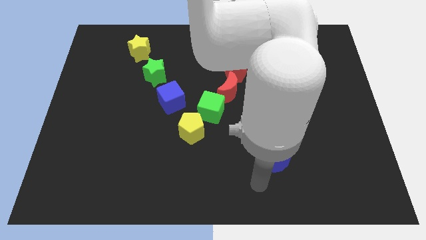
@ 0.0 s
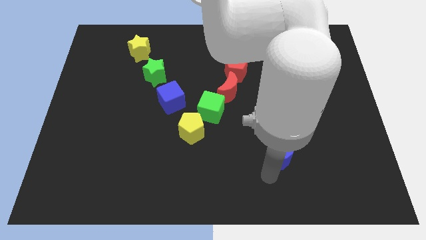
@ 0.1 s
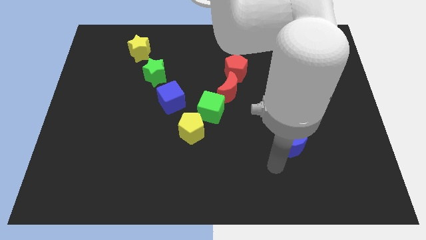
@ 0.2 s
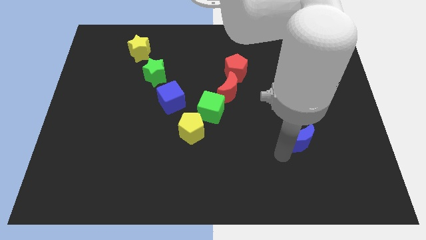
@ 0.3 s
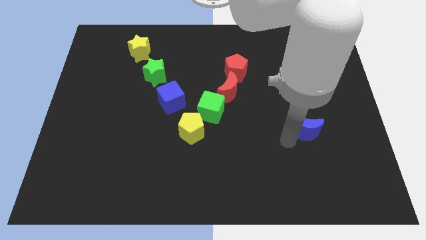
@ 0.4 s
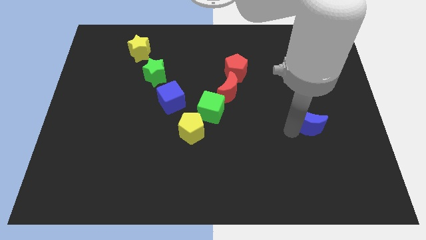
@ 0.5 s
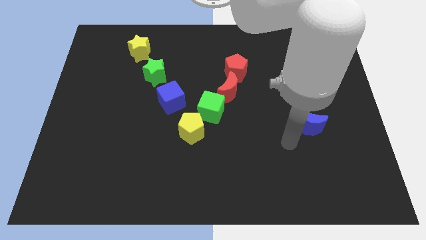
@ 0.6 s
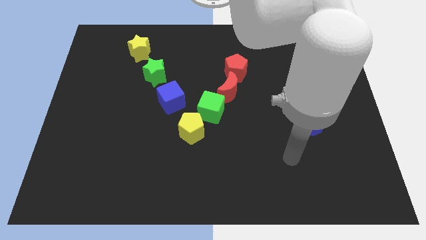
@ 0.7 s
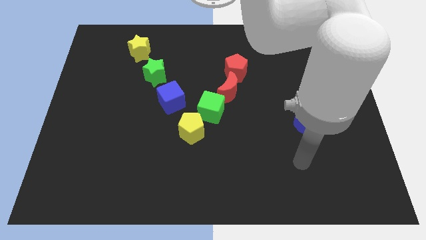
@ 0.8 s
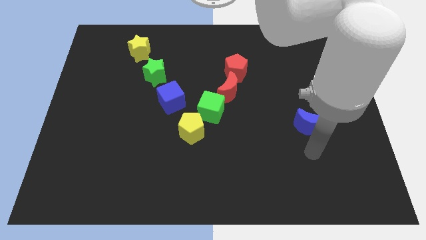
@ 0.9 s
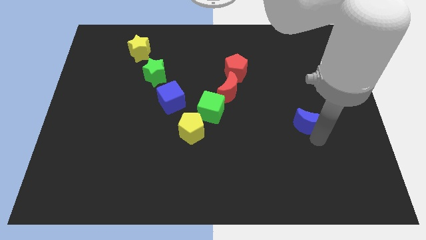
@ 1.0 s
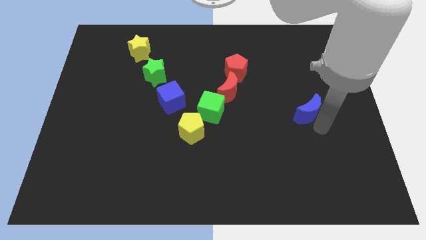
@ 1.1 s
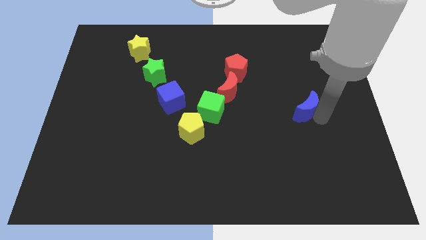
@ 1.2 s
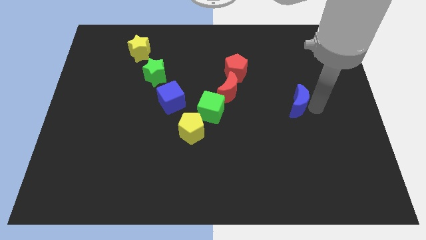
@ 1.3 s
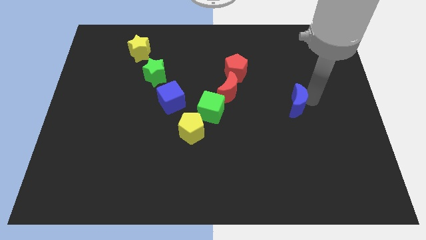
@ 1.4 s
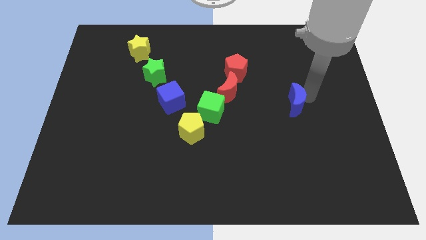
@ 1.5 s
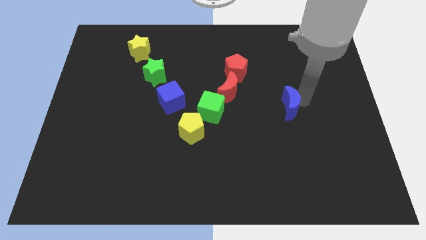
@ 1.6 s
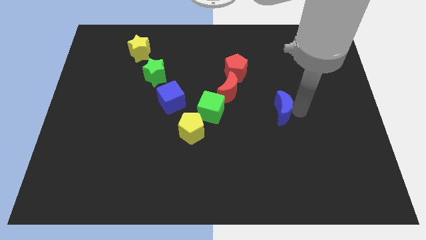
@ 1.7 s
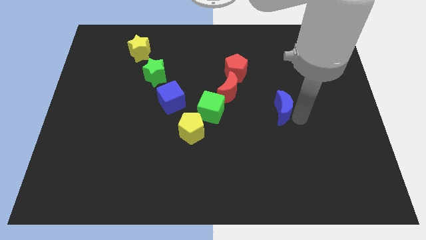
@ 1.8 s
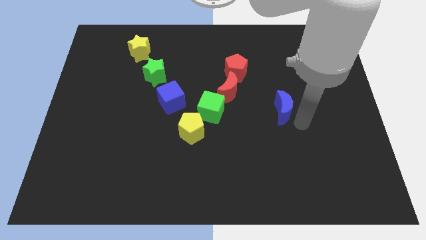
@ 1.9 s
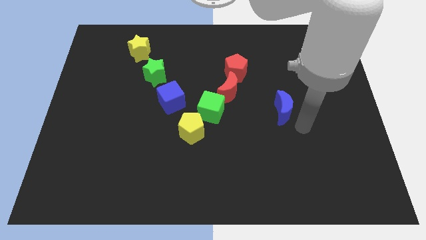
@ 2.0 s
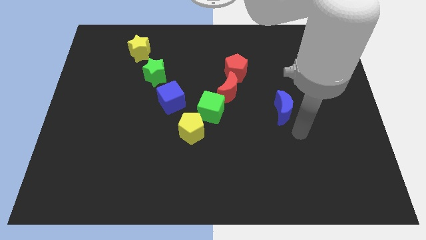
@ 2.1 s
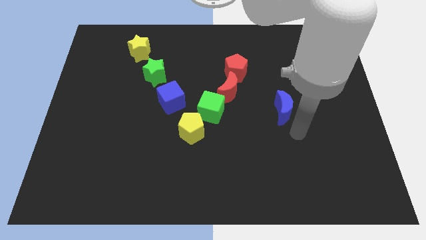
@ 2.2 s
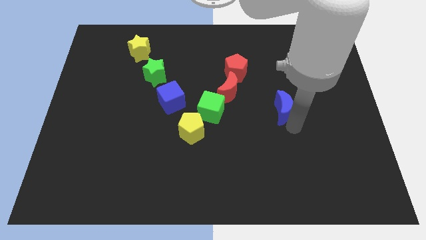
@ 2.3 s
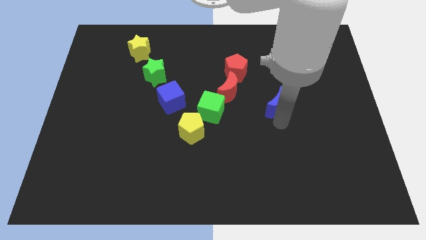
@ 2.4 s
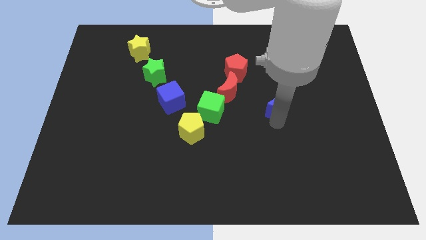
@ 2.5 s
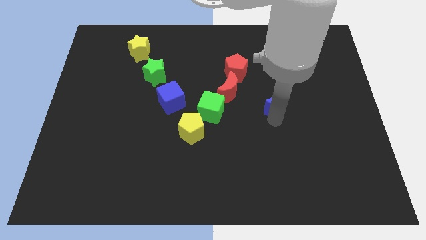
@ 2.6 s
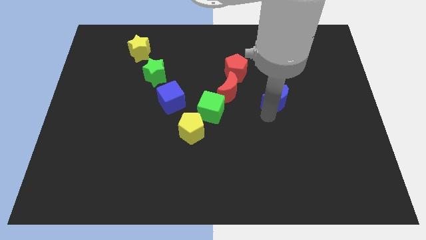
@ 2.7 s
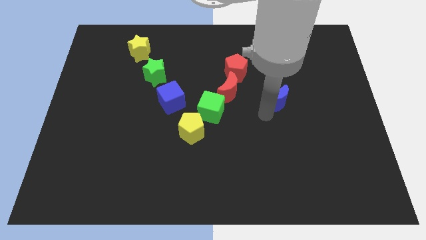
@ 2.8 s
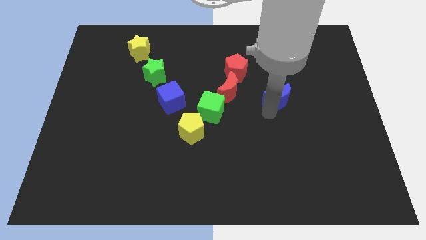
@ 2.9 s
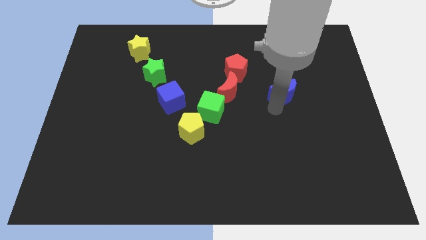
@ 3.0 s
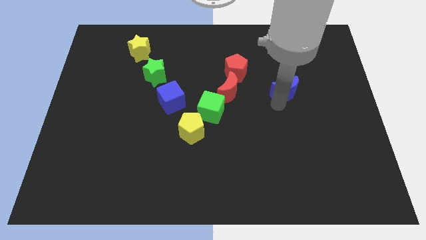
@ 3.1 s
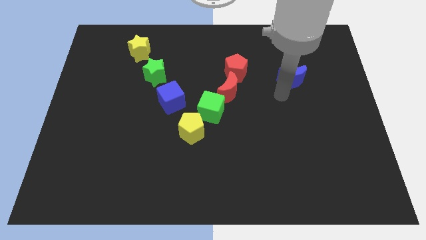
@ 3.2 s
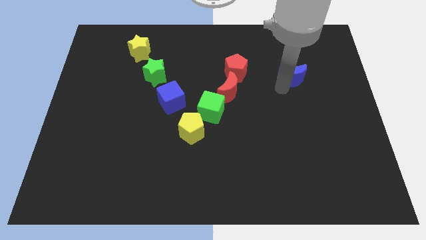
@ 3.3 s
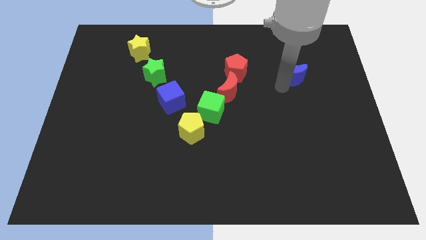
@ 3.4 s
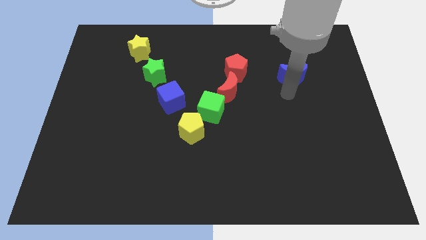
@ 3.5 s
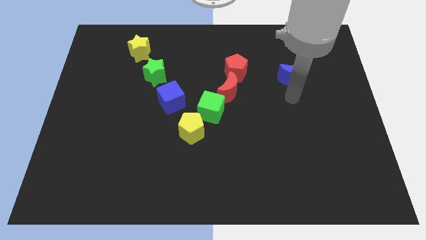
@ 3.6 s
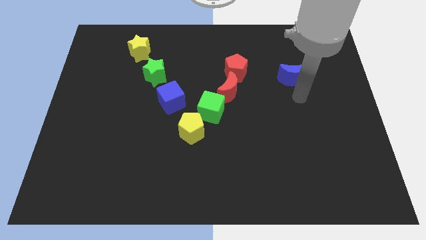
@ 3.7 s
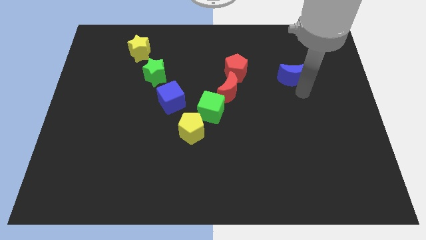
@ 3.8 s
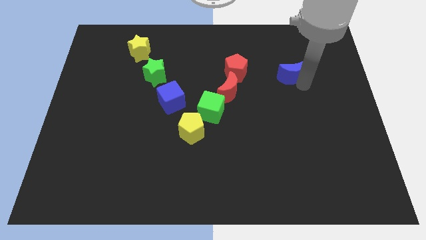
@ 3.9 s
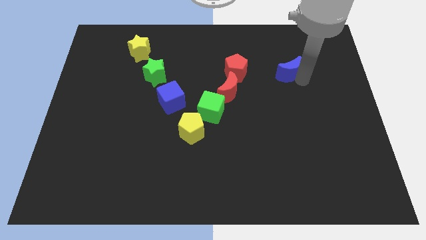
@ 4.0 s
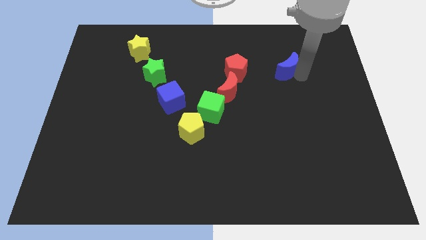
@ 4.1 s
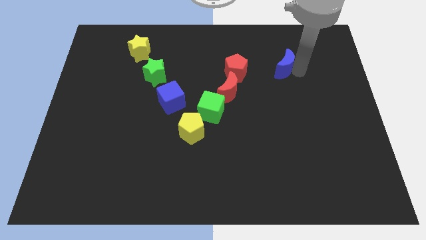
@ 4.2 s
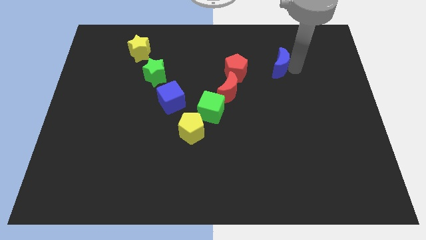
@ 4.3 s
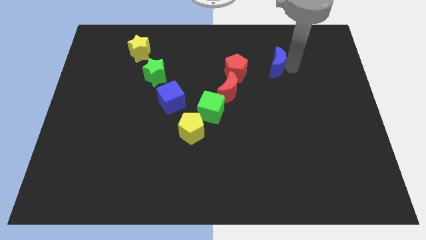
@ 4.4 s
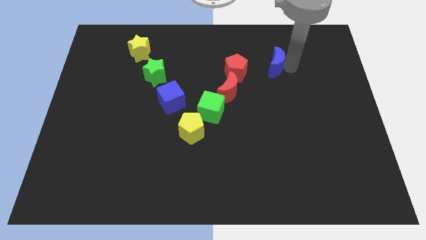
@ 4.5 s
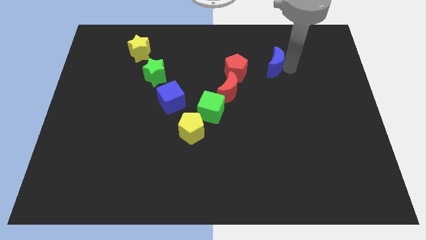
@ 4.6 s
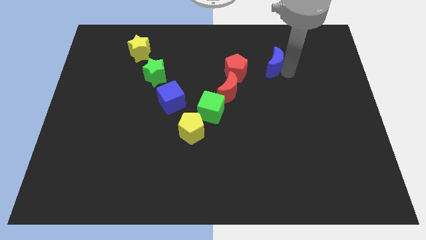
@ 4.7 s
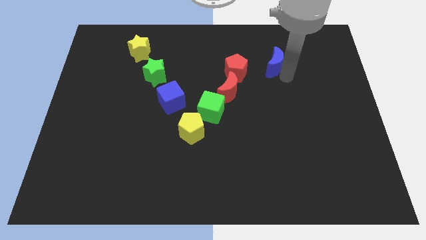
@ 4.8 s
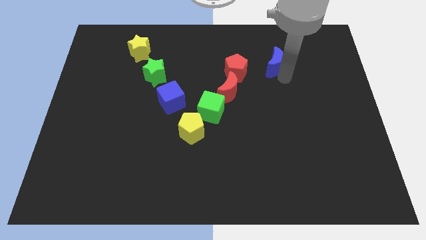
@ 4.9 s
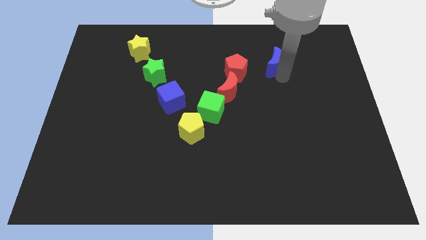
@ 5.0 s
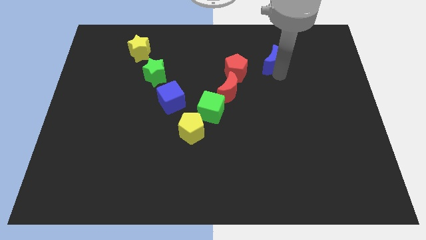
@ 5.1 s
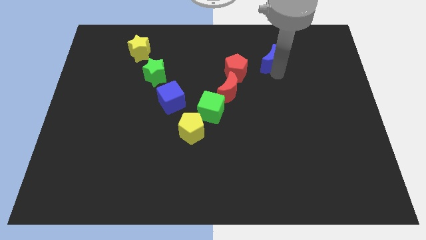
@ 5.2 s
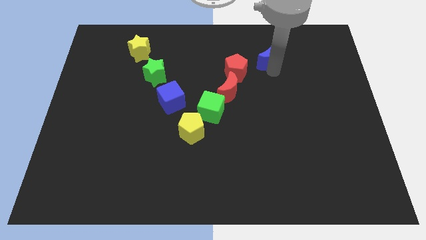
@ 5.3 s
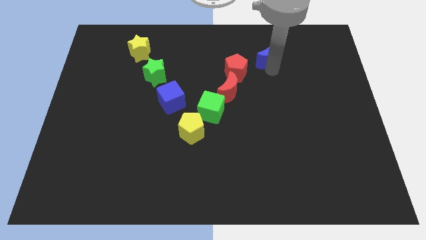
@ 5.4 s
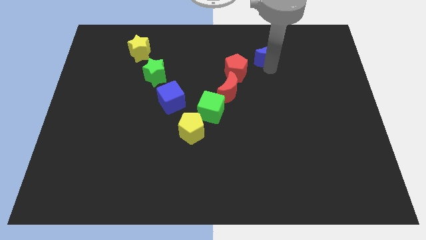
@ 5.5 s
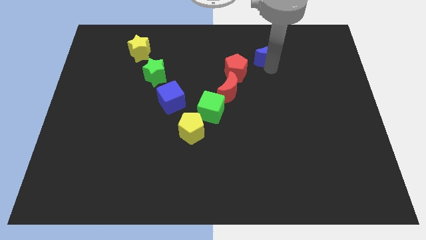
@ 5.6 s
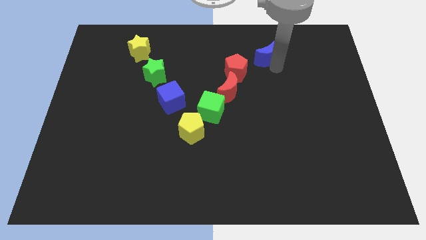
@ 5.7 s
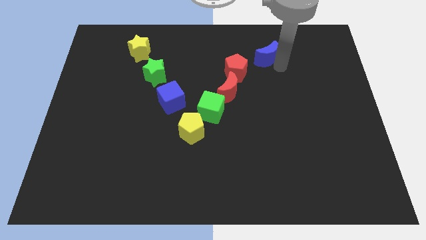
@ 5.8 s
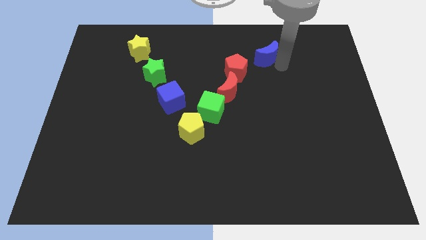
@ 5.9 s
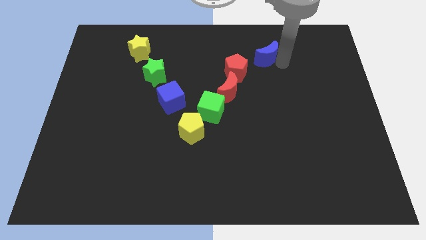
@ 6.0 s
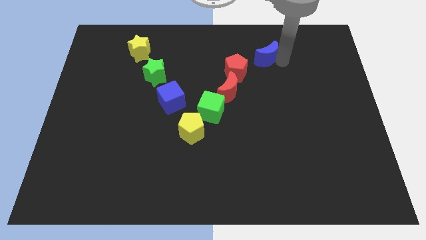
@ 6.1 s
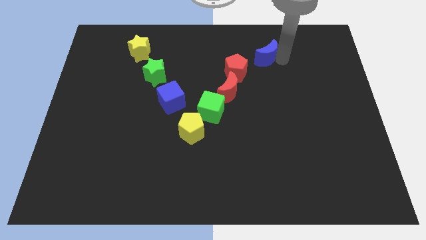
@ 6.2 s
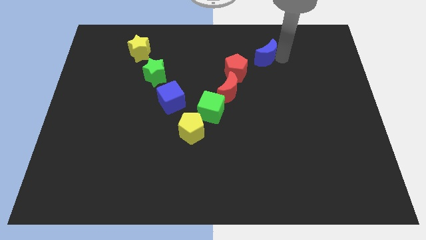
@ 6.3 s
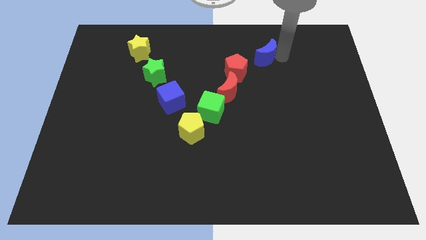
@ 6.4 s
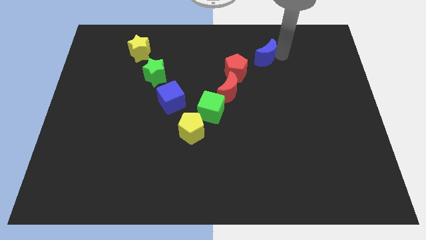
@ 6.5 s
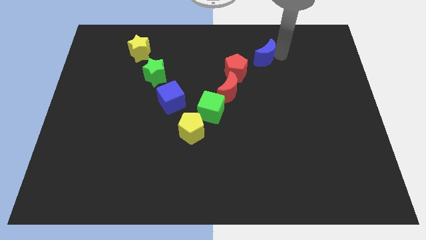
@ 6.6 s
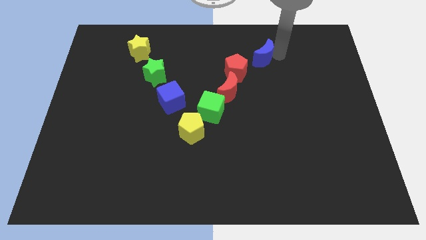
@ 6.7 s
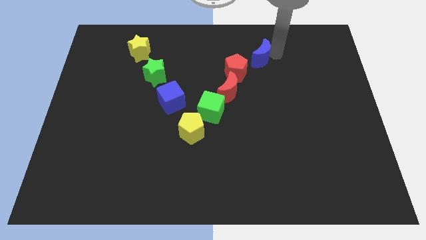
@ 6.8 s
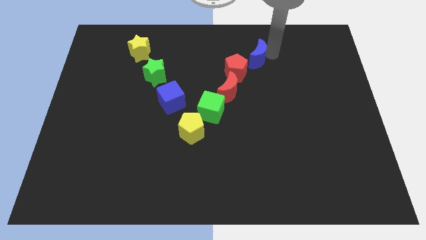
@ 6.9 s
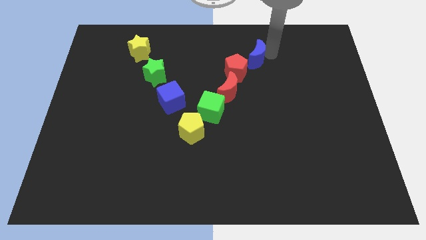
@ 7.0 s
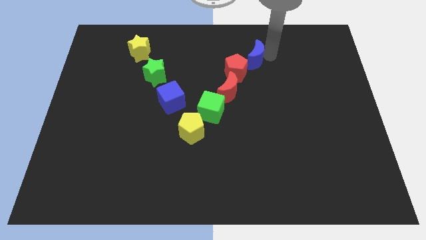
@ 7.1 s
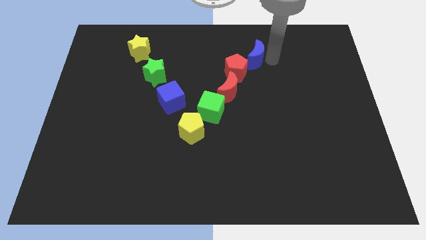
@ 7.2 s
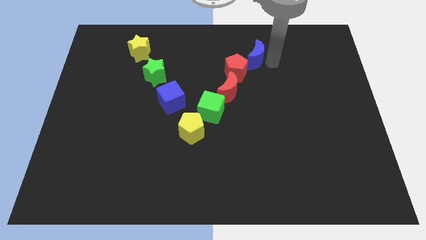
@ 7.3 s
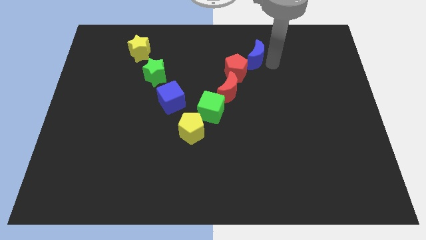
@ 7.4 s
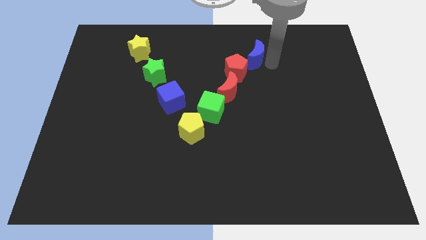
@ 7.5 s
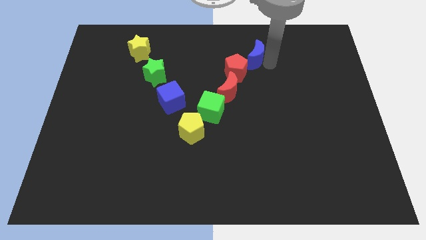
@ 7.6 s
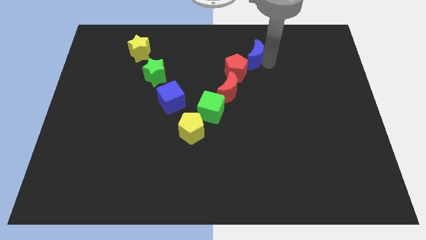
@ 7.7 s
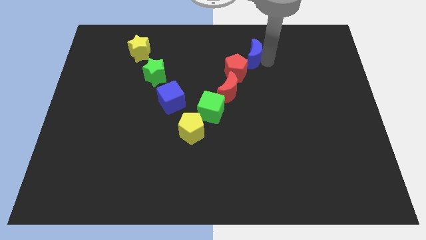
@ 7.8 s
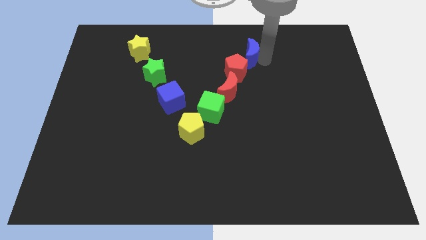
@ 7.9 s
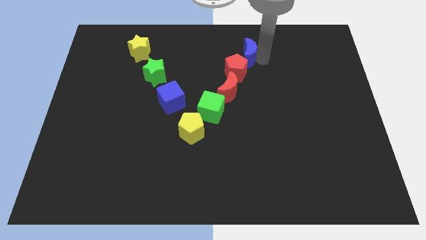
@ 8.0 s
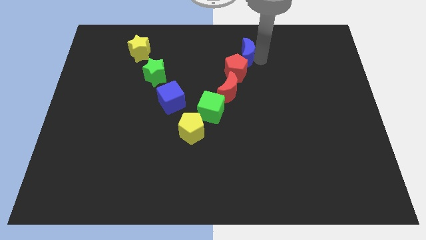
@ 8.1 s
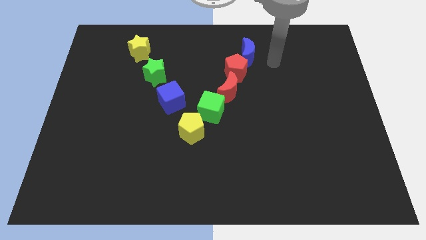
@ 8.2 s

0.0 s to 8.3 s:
place the blue crescent at the top of red pentagon

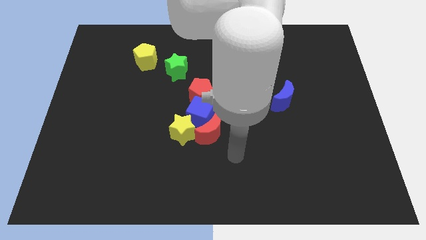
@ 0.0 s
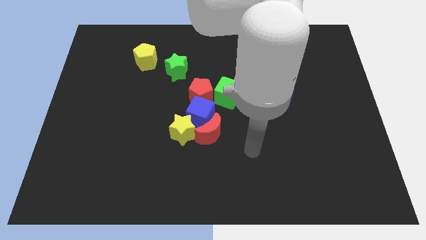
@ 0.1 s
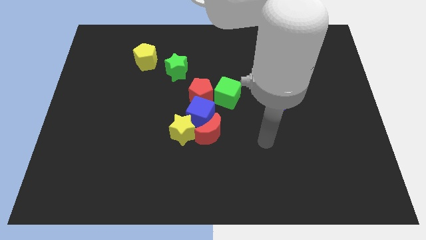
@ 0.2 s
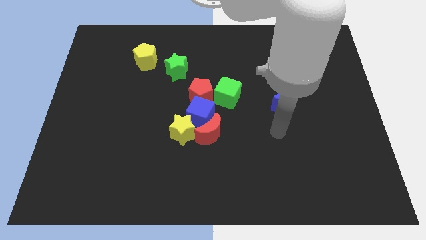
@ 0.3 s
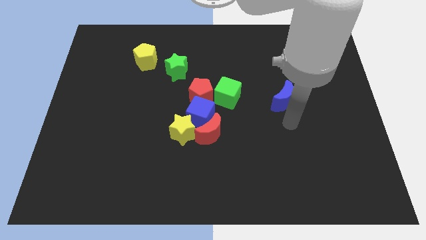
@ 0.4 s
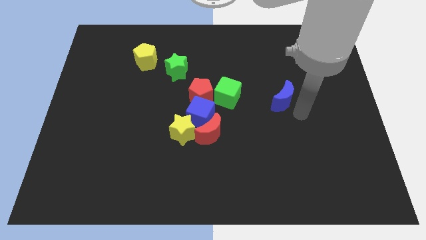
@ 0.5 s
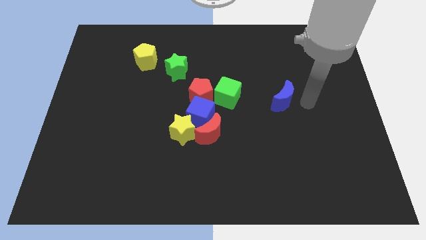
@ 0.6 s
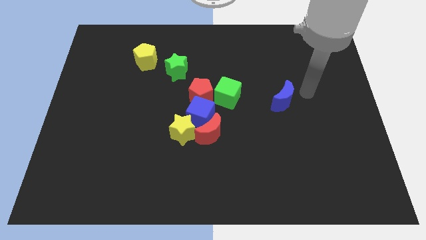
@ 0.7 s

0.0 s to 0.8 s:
move your arm to the right of the blue crescent
